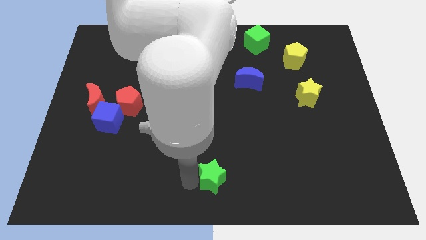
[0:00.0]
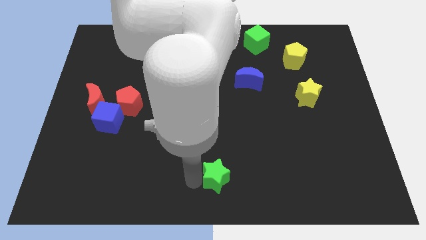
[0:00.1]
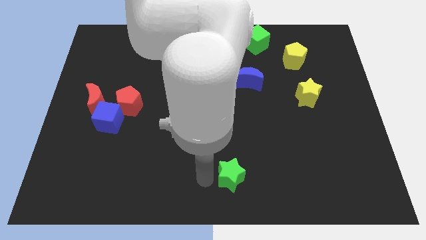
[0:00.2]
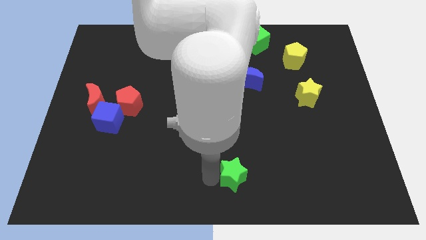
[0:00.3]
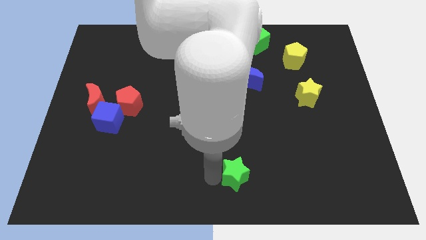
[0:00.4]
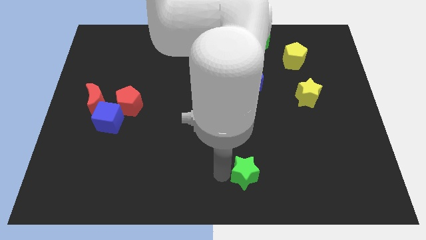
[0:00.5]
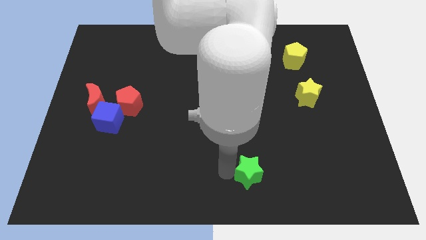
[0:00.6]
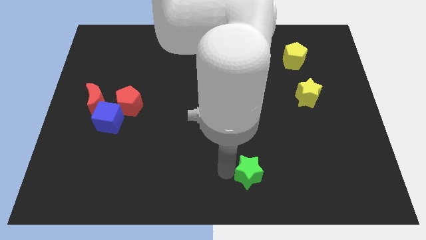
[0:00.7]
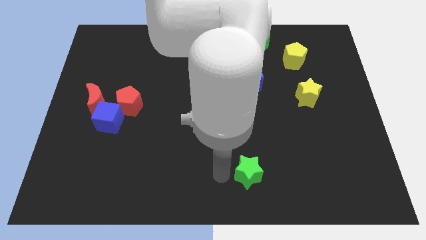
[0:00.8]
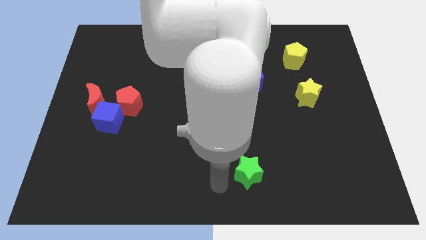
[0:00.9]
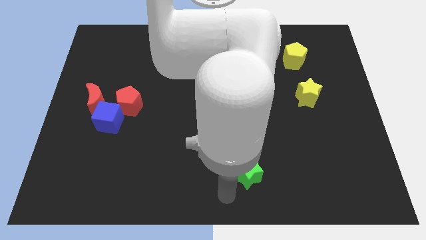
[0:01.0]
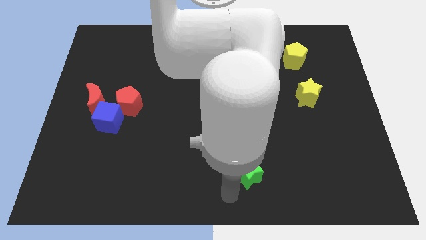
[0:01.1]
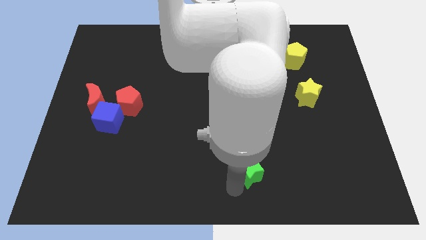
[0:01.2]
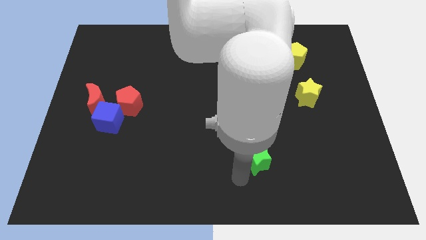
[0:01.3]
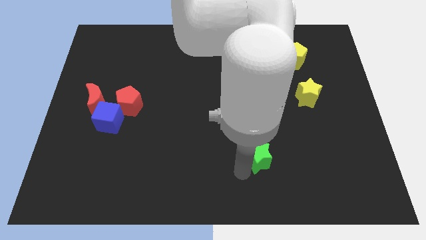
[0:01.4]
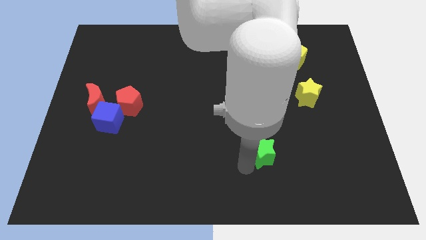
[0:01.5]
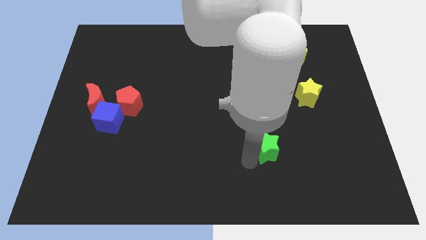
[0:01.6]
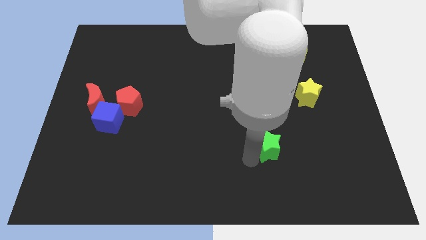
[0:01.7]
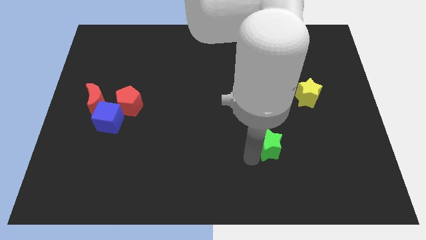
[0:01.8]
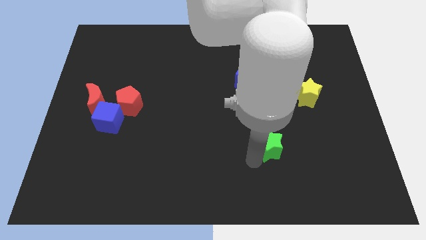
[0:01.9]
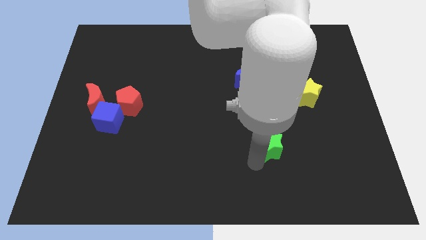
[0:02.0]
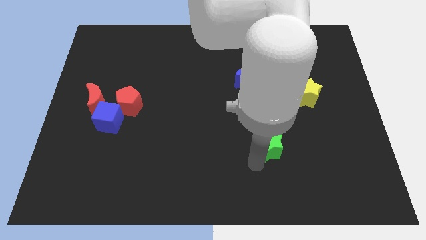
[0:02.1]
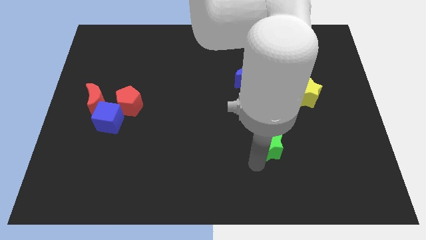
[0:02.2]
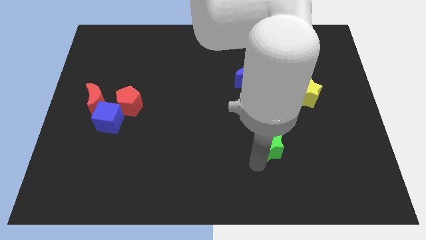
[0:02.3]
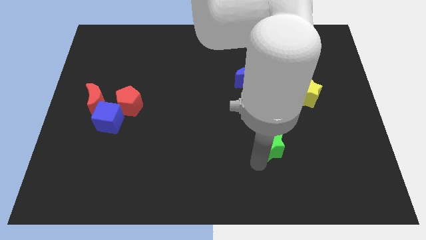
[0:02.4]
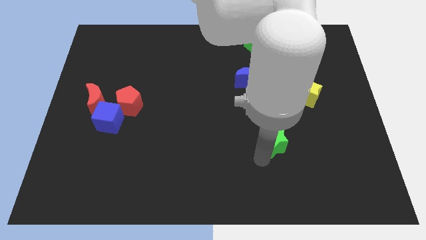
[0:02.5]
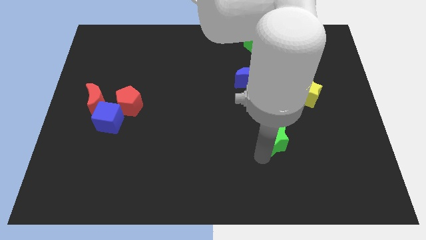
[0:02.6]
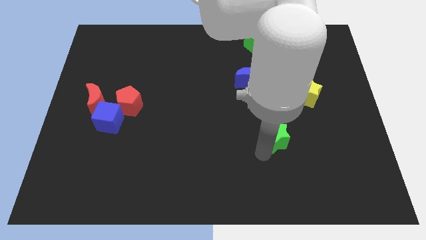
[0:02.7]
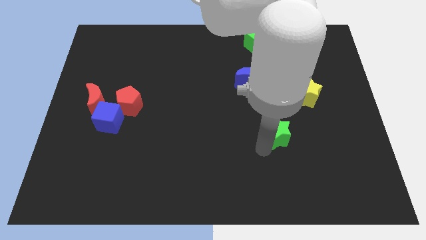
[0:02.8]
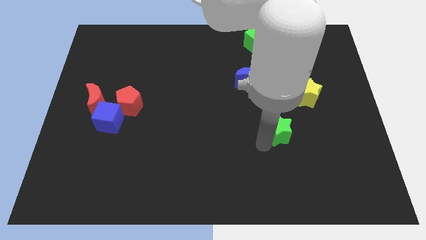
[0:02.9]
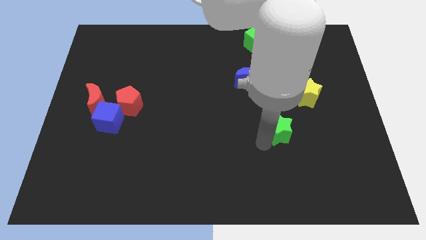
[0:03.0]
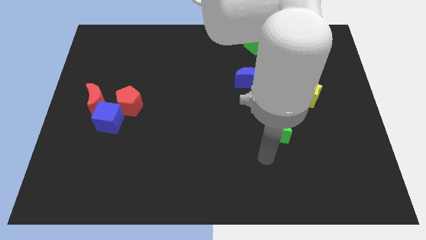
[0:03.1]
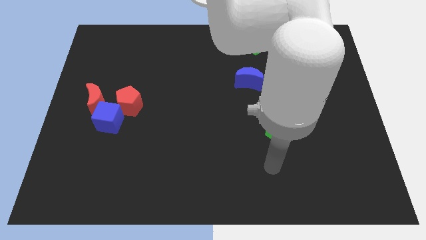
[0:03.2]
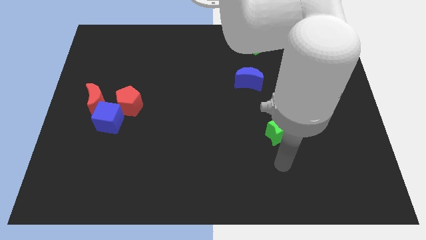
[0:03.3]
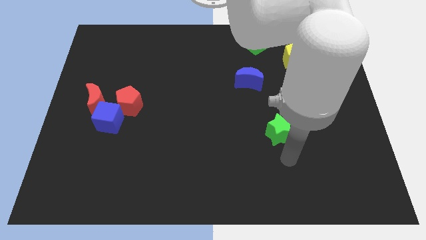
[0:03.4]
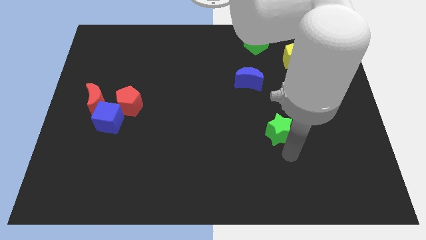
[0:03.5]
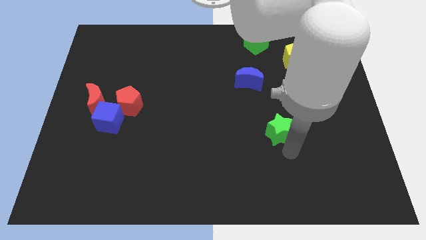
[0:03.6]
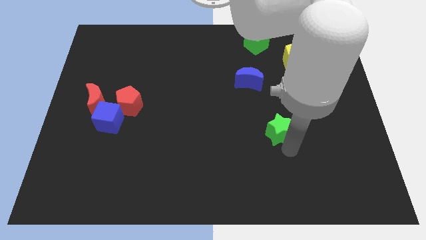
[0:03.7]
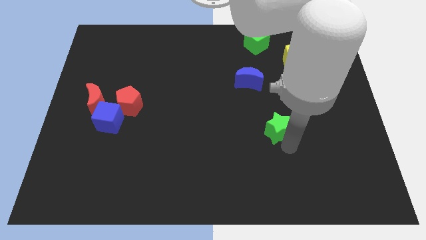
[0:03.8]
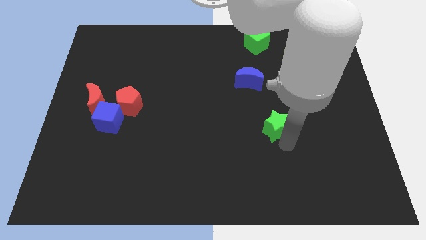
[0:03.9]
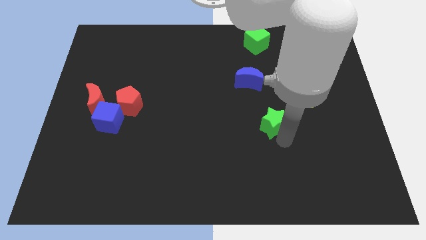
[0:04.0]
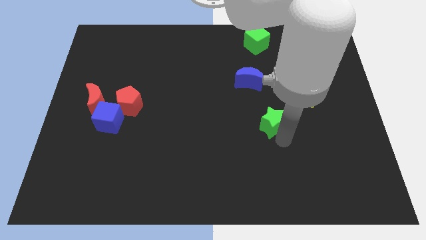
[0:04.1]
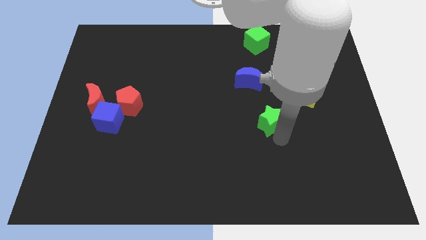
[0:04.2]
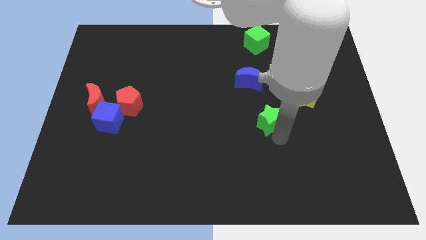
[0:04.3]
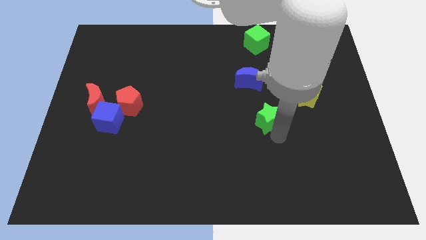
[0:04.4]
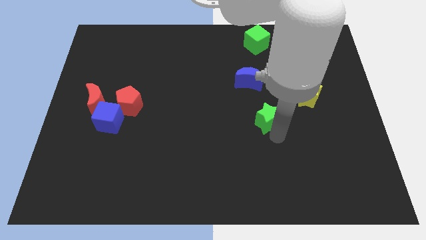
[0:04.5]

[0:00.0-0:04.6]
move the green star towards the bottom side of the blue moon

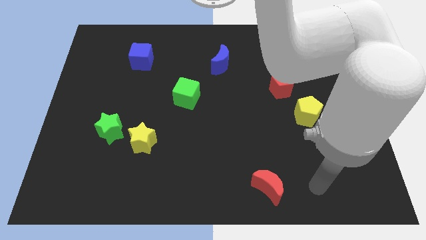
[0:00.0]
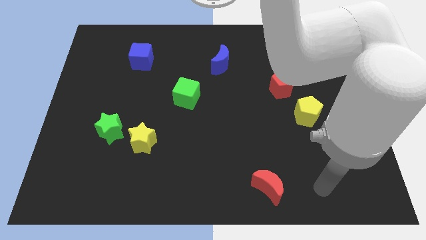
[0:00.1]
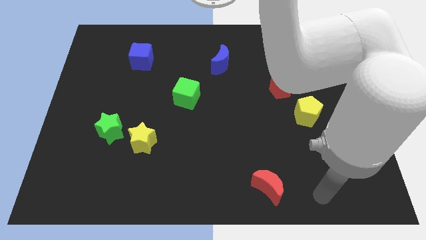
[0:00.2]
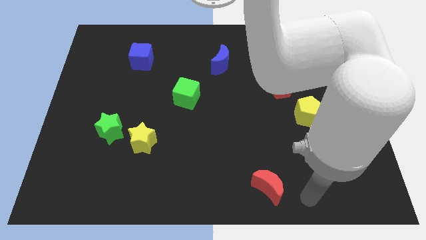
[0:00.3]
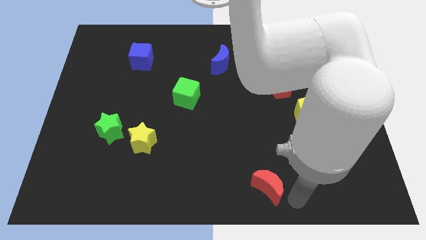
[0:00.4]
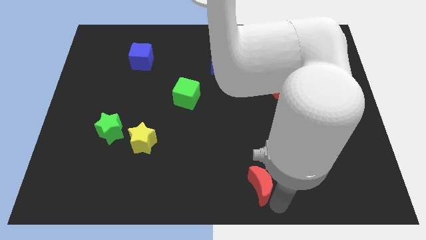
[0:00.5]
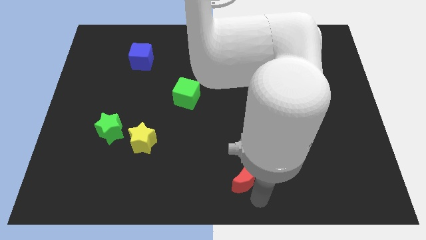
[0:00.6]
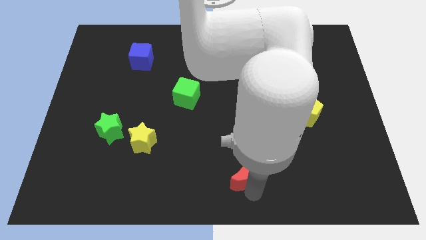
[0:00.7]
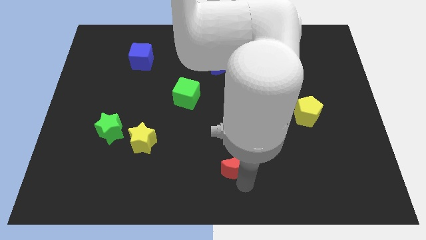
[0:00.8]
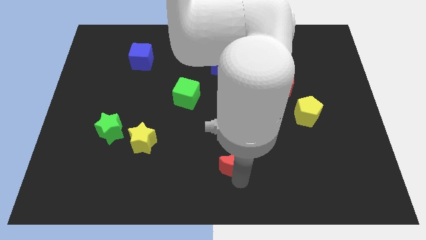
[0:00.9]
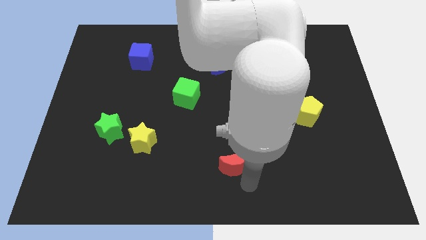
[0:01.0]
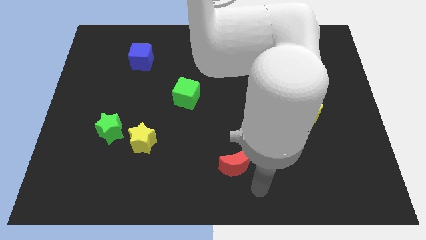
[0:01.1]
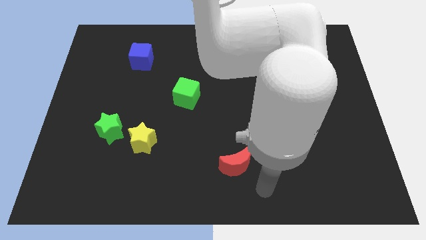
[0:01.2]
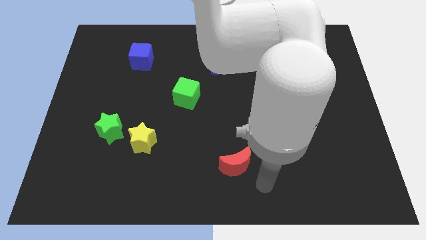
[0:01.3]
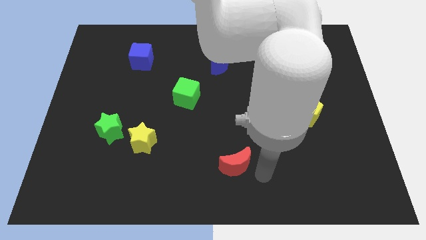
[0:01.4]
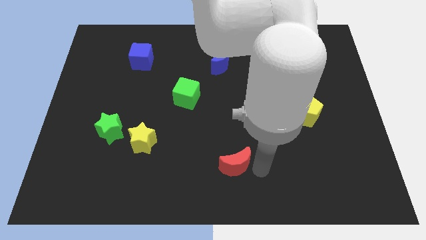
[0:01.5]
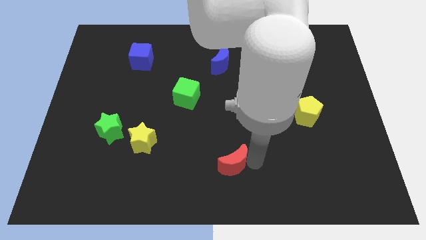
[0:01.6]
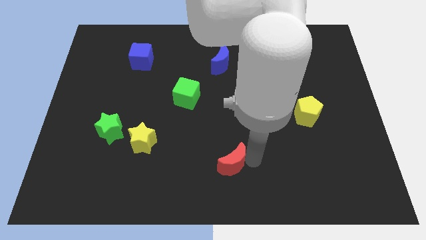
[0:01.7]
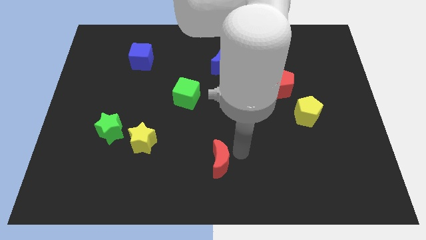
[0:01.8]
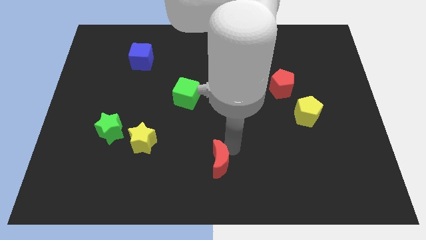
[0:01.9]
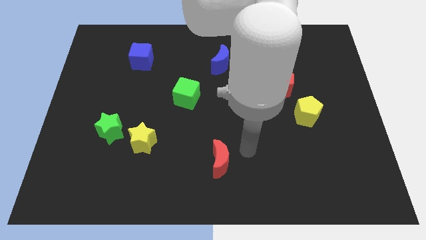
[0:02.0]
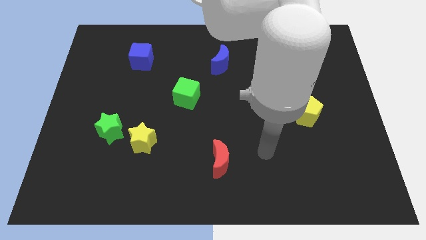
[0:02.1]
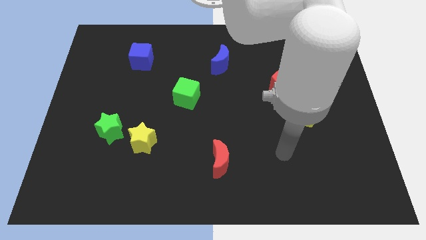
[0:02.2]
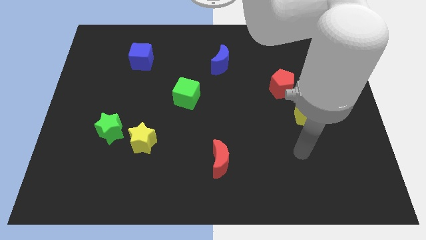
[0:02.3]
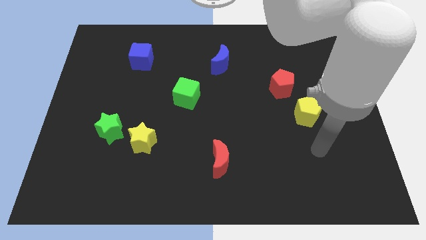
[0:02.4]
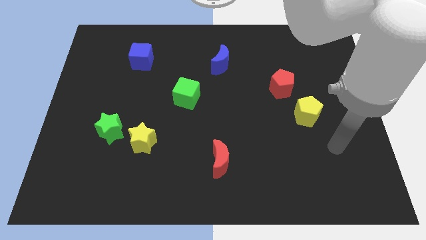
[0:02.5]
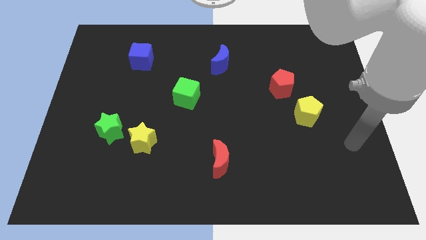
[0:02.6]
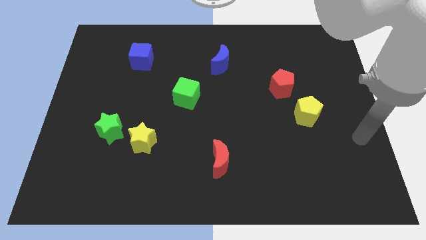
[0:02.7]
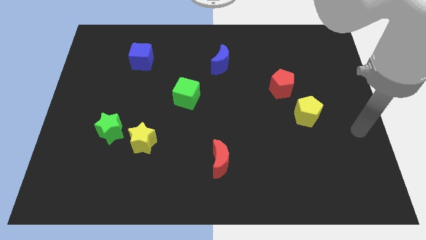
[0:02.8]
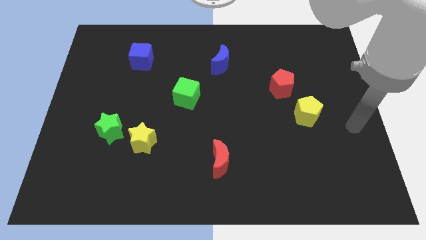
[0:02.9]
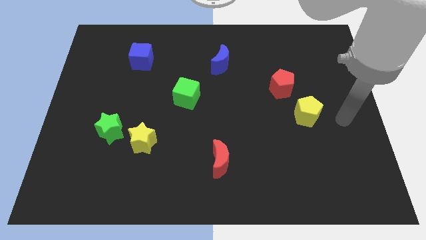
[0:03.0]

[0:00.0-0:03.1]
place the red crescent diagonally right of the yellow star

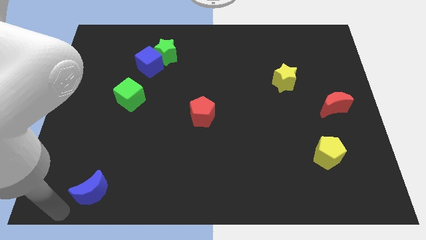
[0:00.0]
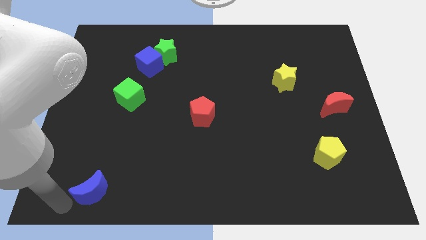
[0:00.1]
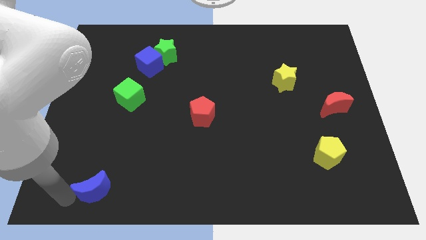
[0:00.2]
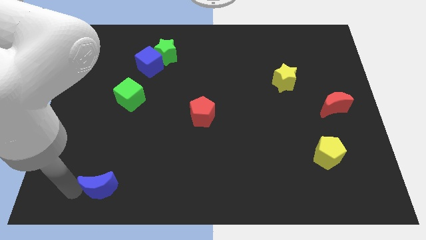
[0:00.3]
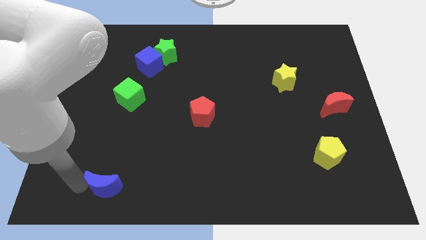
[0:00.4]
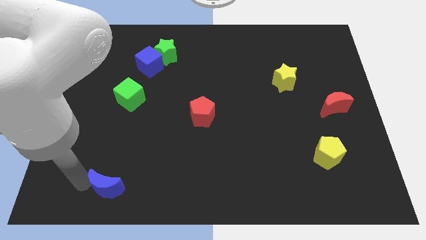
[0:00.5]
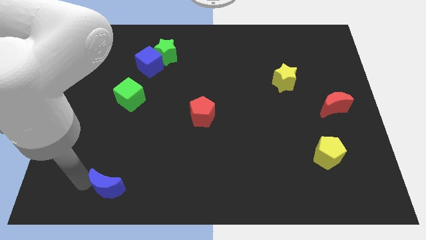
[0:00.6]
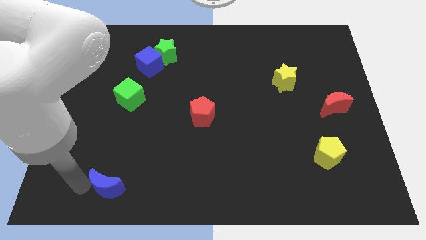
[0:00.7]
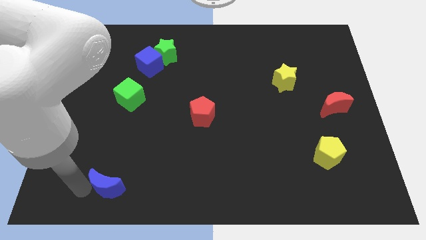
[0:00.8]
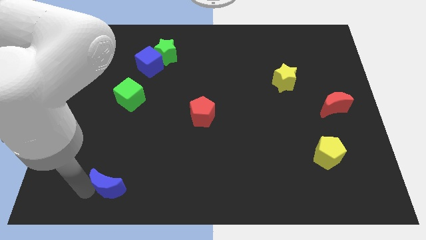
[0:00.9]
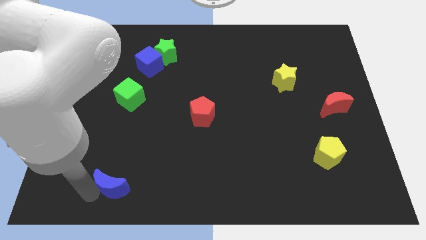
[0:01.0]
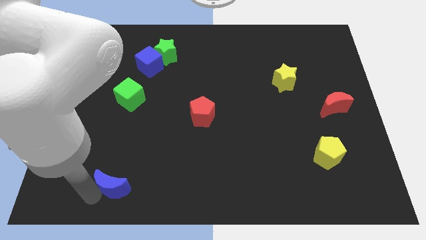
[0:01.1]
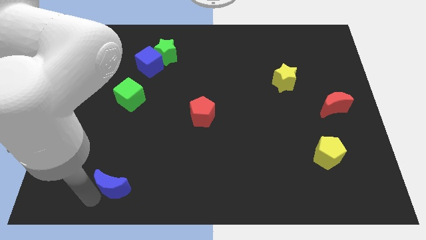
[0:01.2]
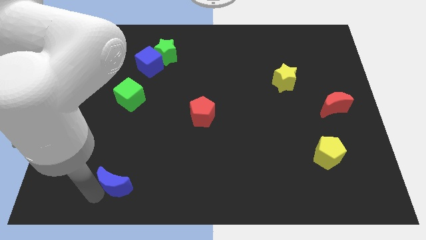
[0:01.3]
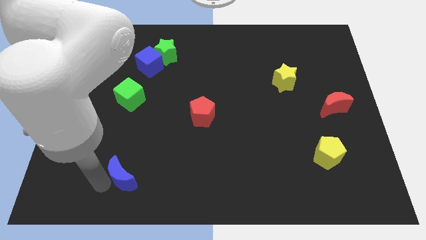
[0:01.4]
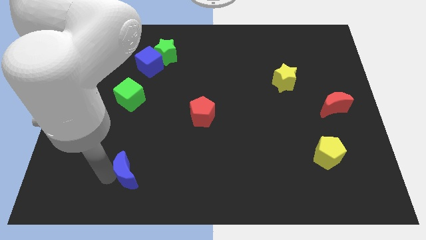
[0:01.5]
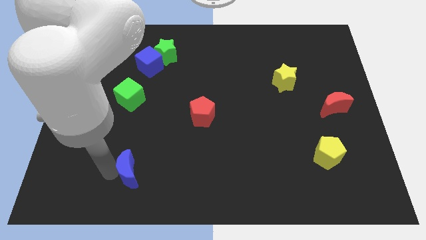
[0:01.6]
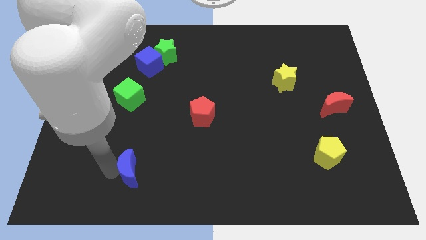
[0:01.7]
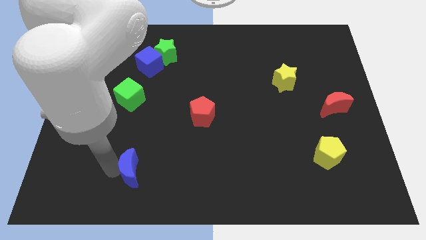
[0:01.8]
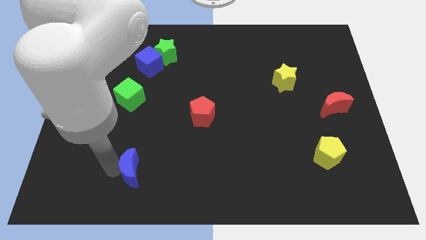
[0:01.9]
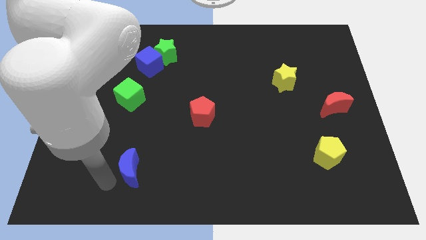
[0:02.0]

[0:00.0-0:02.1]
place the blue moon vertically below the green cube
